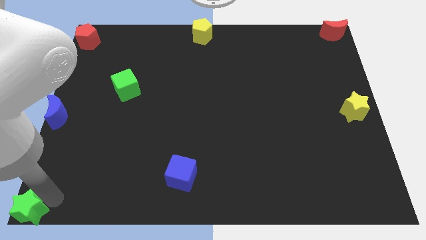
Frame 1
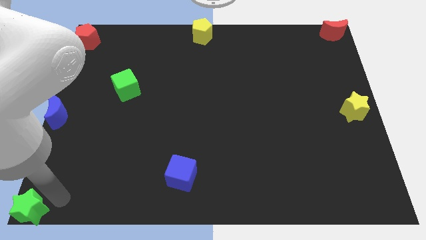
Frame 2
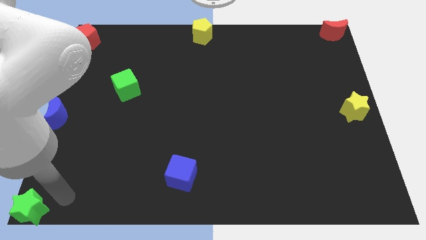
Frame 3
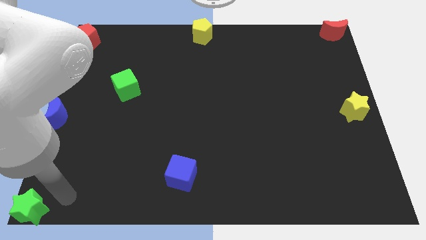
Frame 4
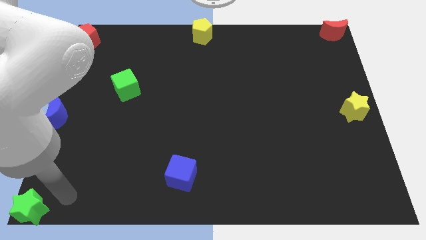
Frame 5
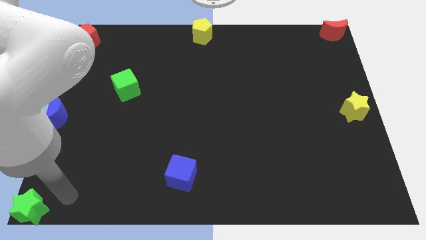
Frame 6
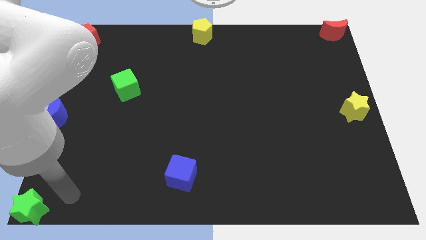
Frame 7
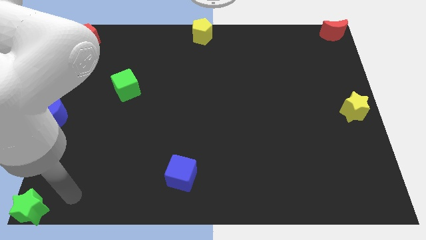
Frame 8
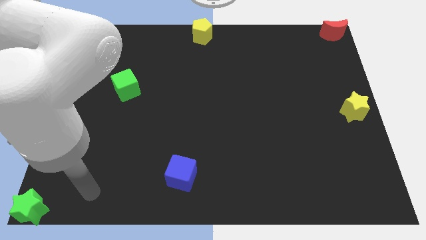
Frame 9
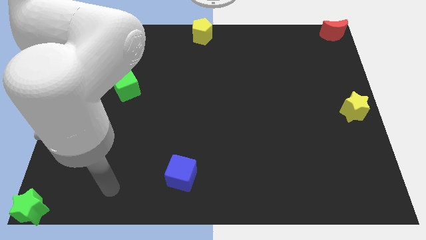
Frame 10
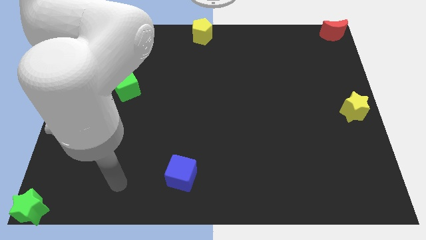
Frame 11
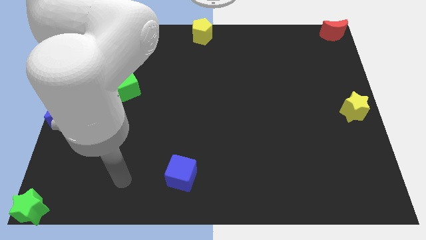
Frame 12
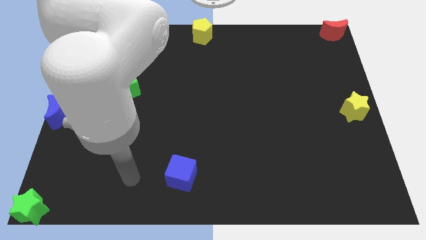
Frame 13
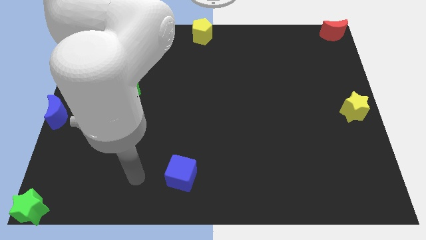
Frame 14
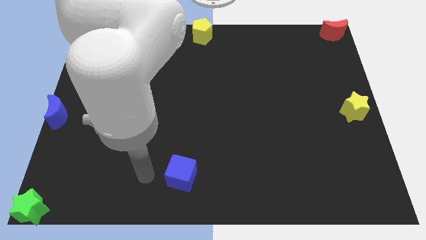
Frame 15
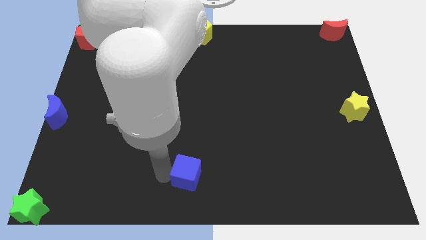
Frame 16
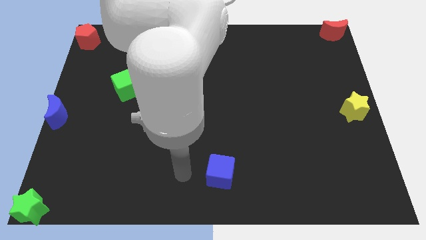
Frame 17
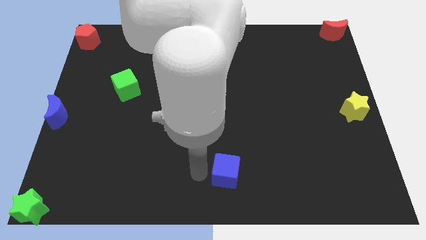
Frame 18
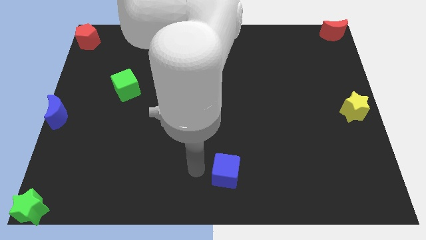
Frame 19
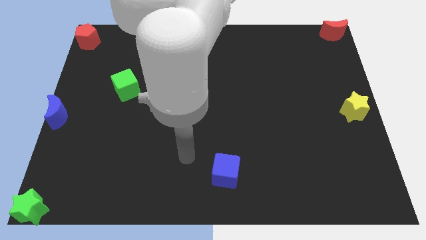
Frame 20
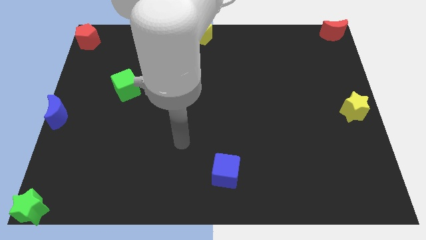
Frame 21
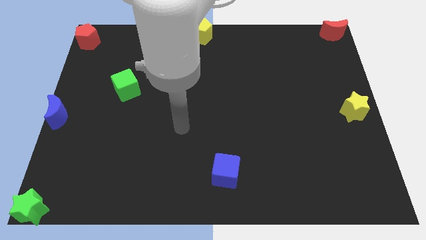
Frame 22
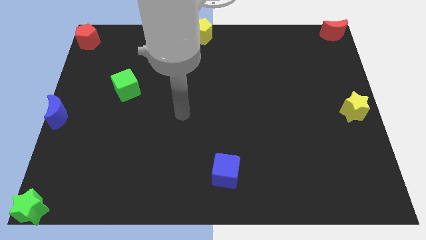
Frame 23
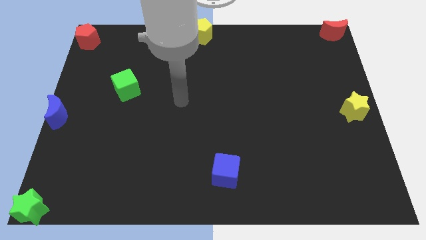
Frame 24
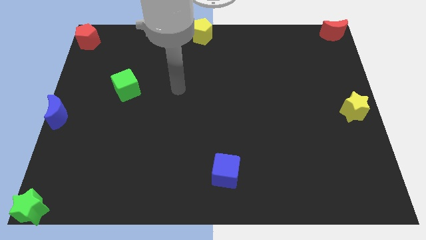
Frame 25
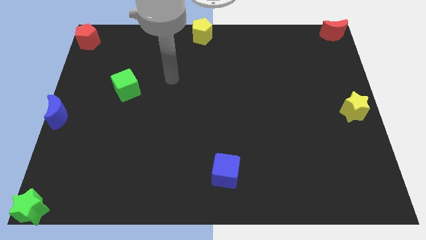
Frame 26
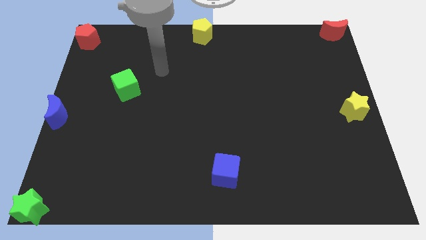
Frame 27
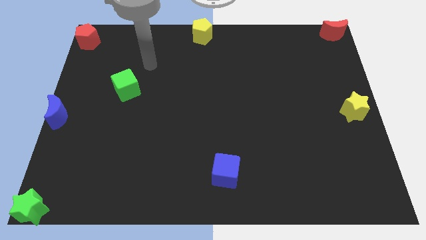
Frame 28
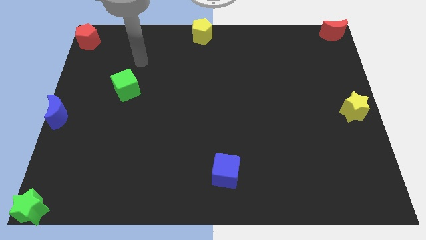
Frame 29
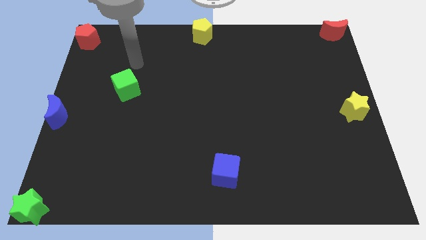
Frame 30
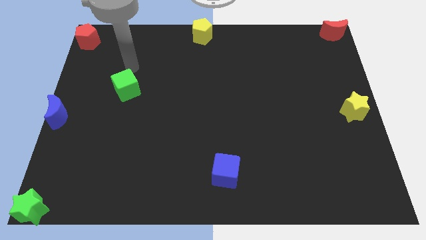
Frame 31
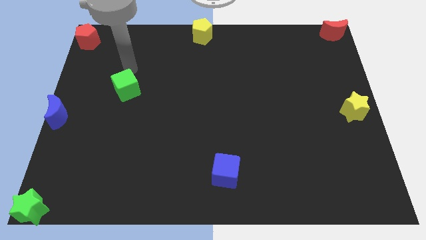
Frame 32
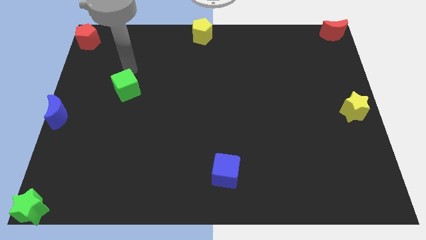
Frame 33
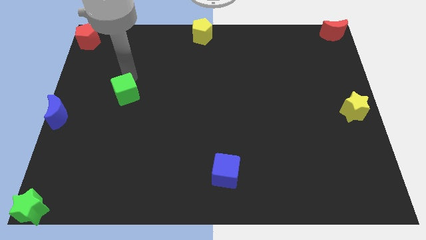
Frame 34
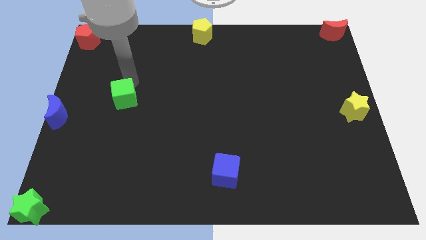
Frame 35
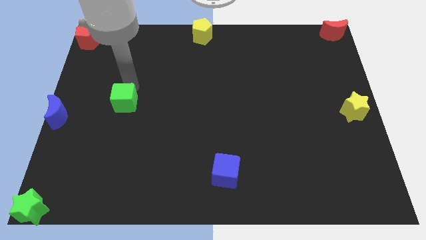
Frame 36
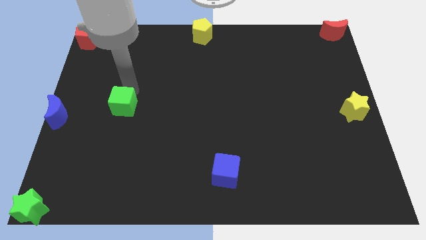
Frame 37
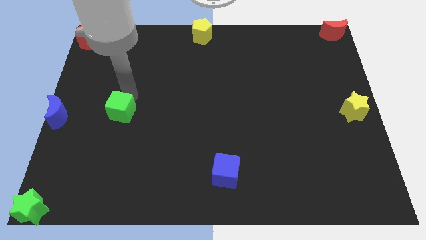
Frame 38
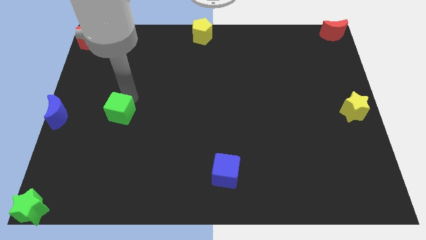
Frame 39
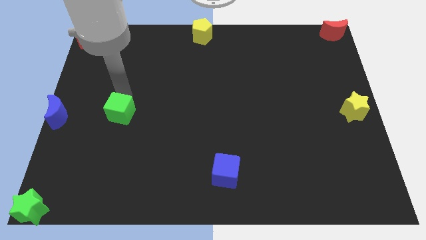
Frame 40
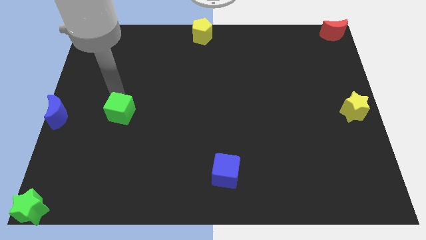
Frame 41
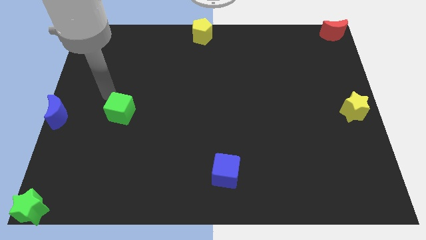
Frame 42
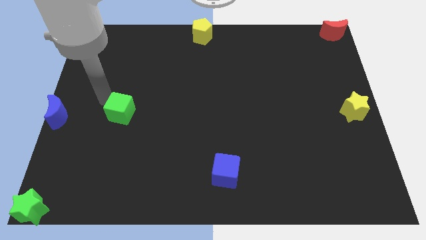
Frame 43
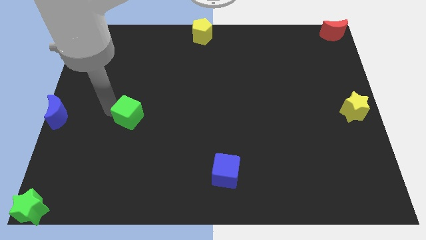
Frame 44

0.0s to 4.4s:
slide the green cube to the right of the blue moon

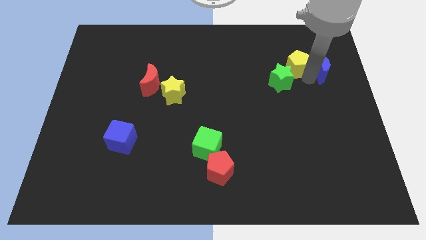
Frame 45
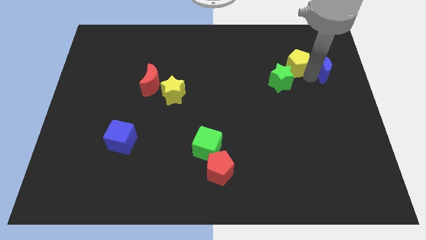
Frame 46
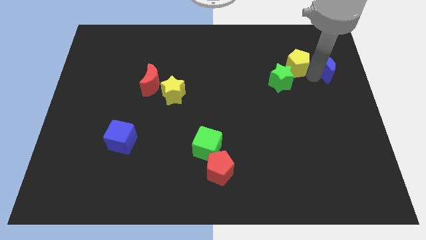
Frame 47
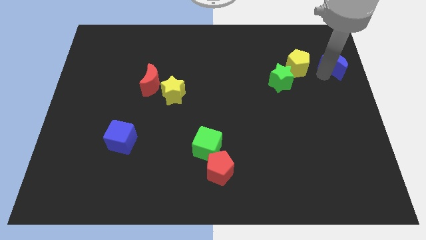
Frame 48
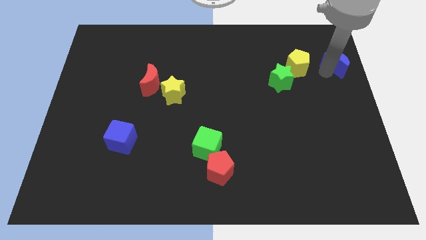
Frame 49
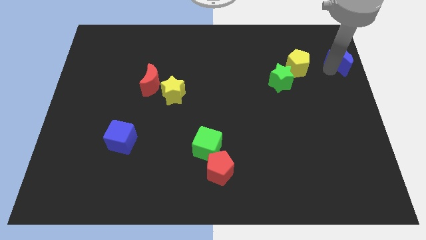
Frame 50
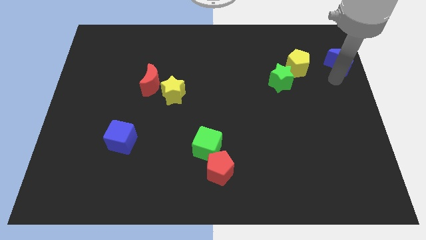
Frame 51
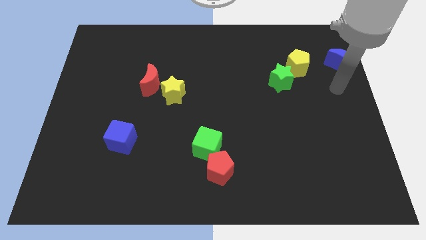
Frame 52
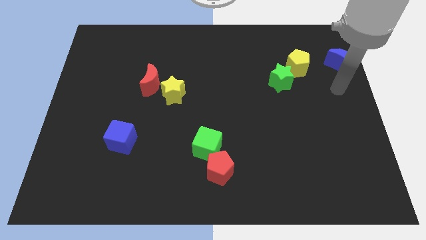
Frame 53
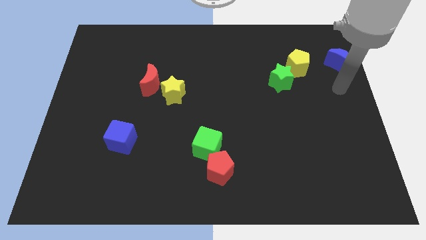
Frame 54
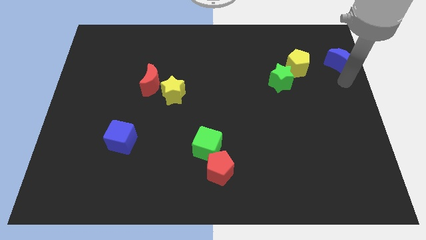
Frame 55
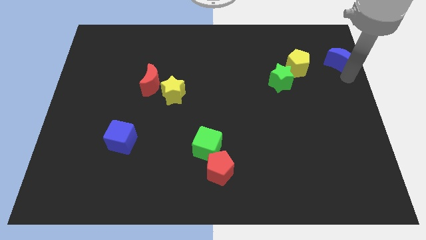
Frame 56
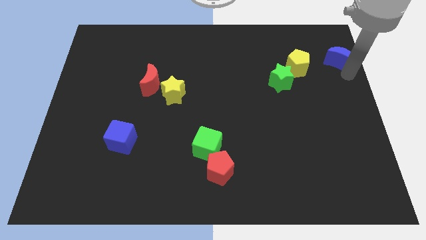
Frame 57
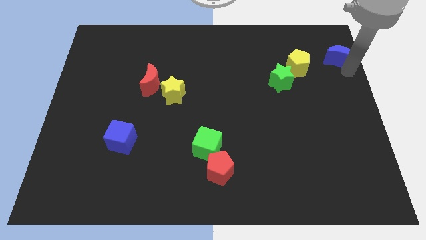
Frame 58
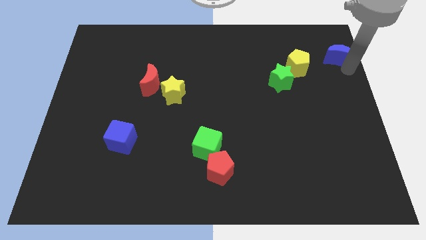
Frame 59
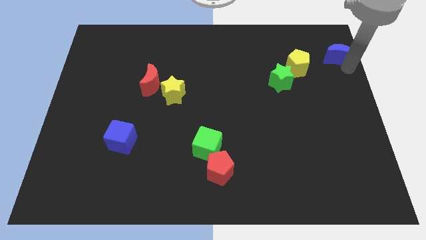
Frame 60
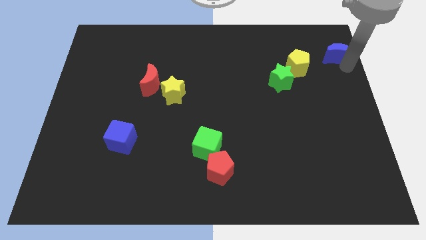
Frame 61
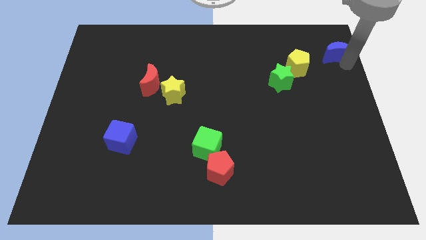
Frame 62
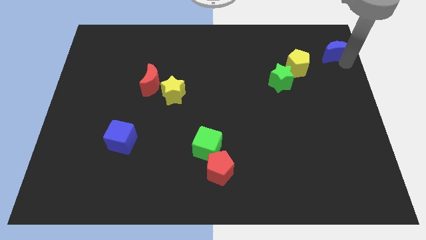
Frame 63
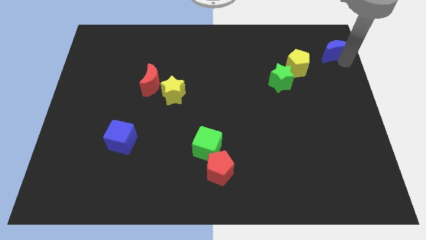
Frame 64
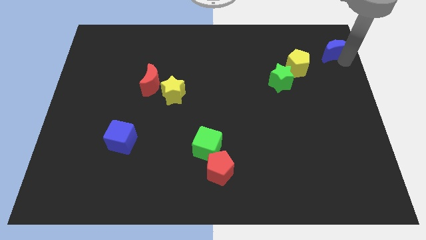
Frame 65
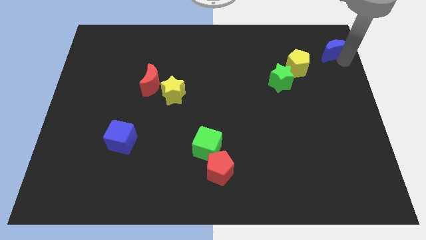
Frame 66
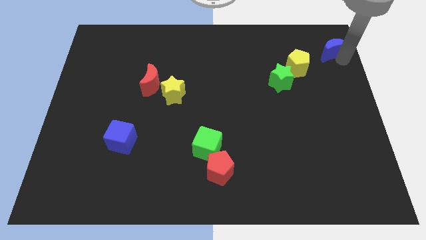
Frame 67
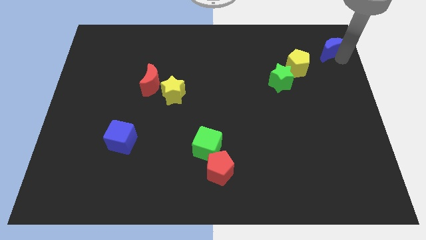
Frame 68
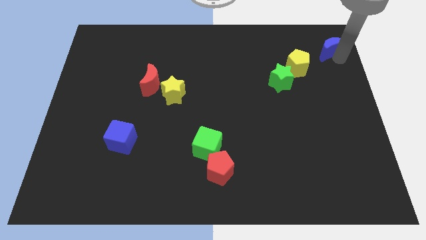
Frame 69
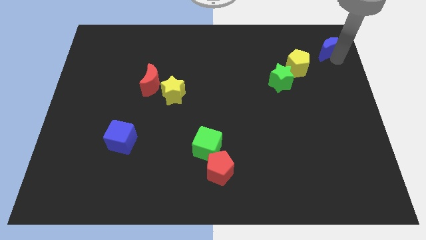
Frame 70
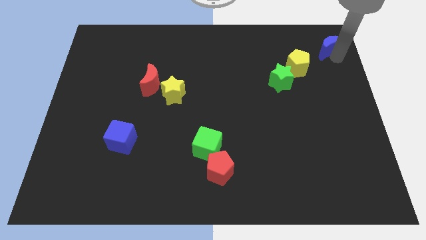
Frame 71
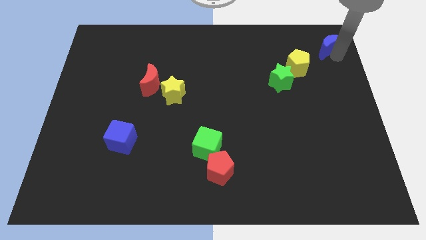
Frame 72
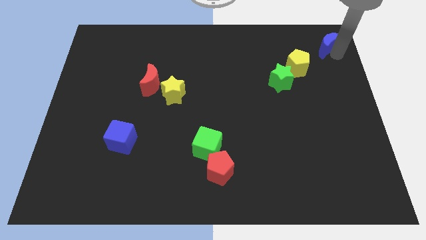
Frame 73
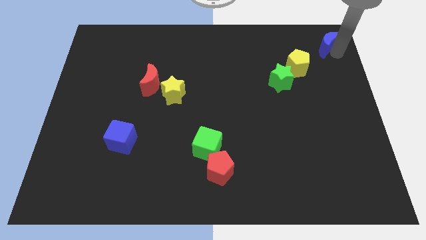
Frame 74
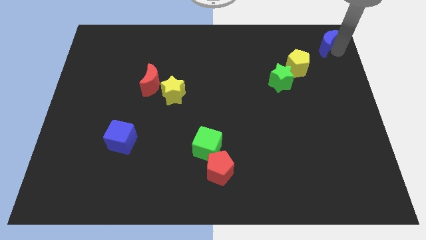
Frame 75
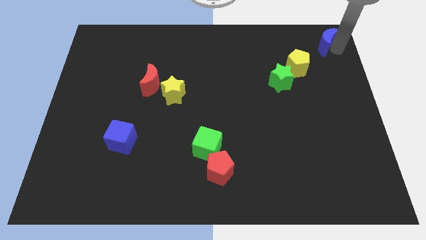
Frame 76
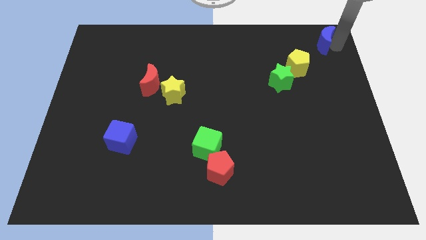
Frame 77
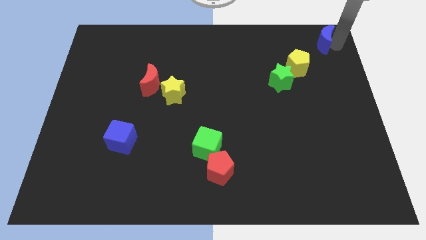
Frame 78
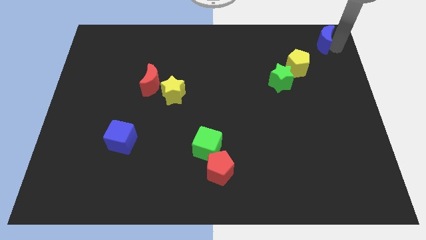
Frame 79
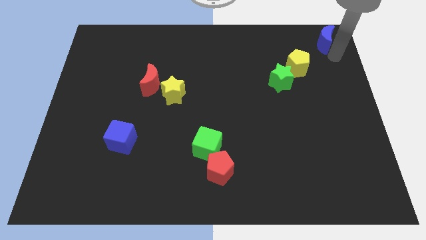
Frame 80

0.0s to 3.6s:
move the blue crescent diagonally at the top right of the yellow pentagon

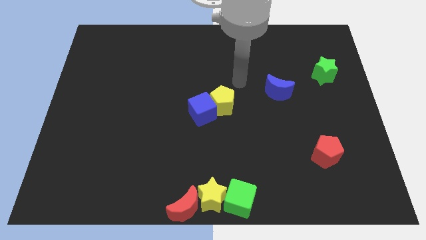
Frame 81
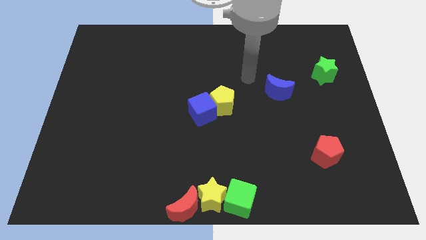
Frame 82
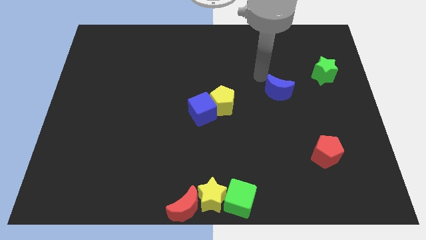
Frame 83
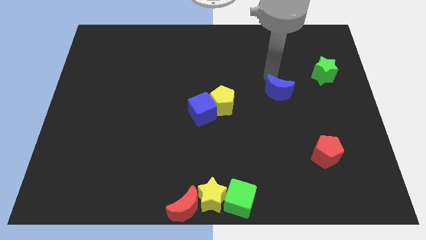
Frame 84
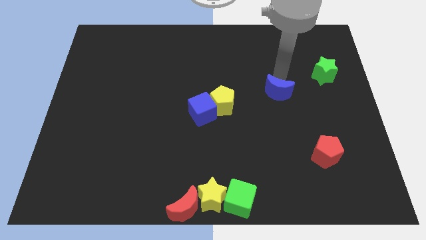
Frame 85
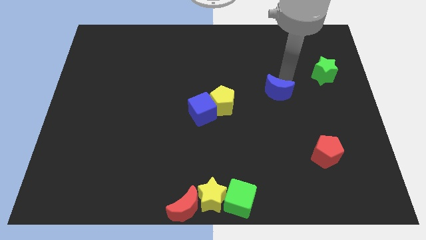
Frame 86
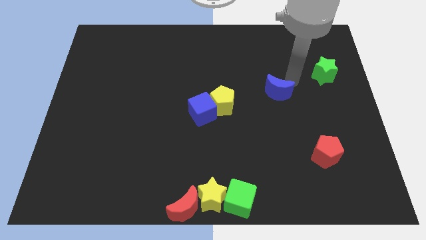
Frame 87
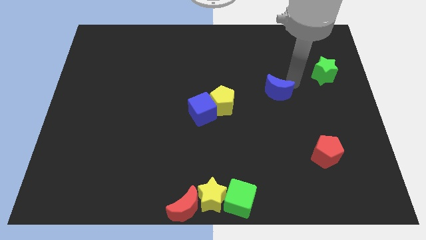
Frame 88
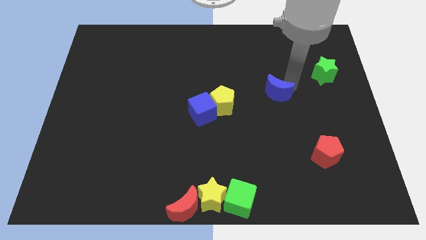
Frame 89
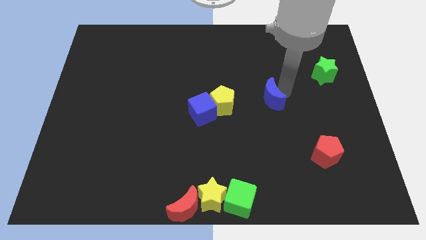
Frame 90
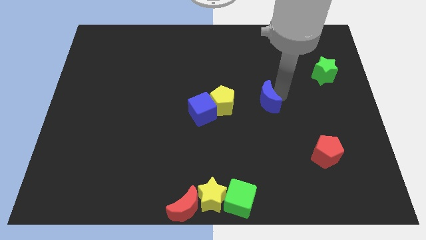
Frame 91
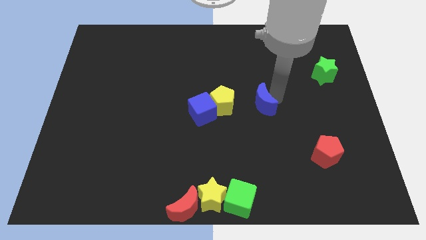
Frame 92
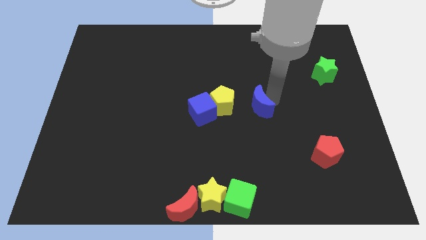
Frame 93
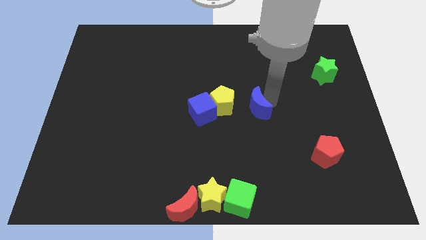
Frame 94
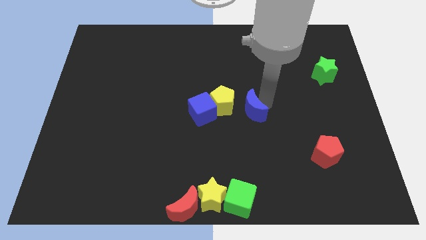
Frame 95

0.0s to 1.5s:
slide the blue moon towards the yellow pentagon
